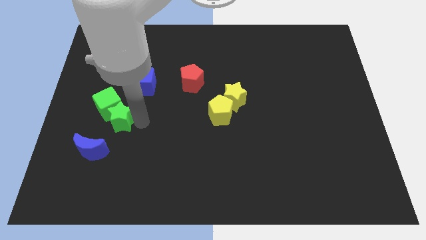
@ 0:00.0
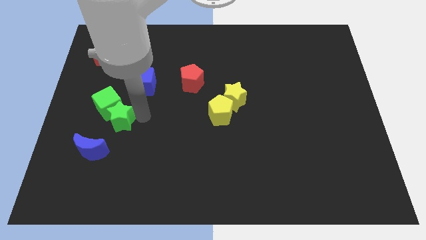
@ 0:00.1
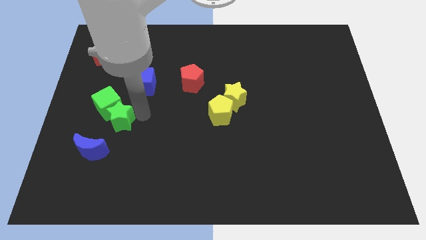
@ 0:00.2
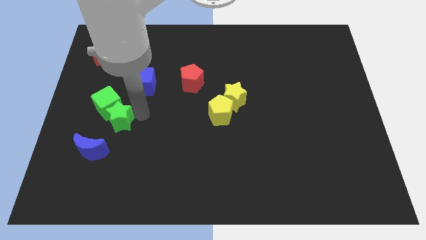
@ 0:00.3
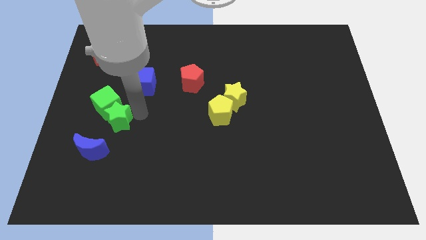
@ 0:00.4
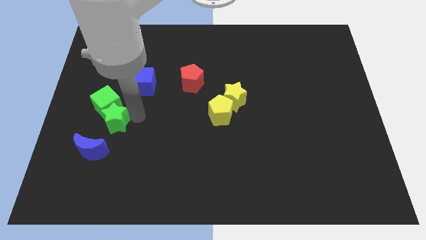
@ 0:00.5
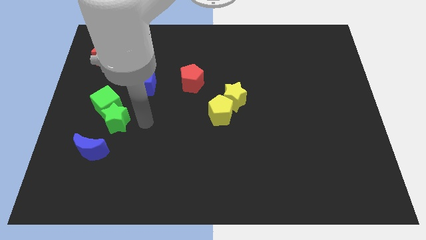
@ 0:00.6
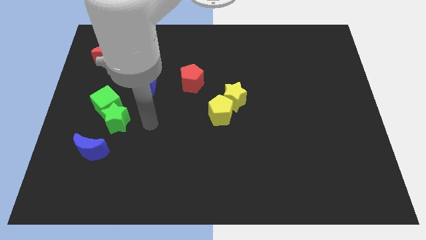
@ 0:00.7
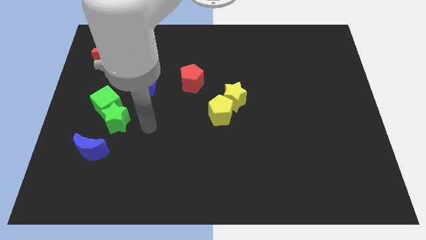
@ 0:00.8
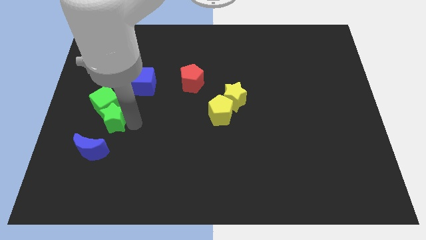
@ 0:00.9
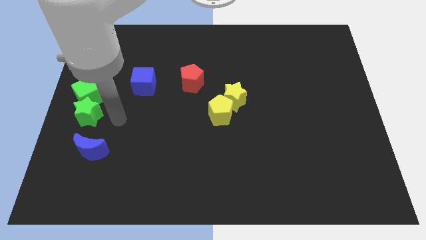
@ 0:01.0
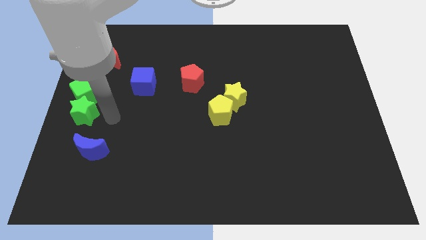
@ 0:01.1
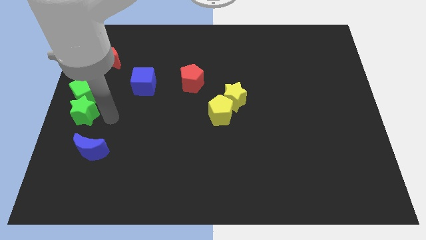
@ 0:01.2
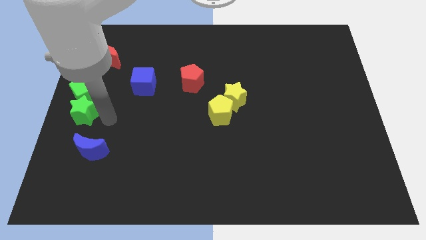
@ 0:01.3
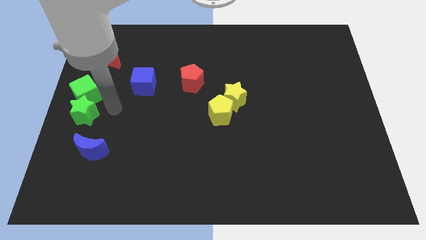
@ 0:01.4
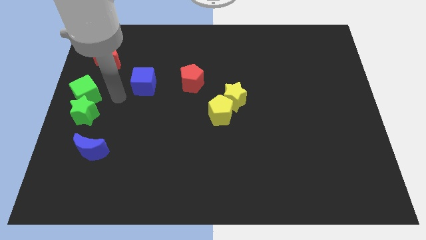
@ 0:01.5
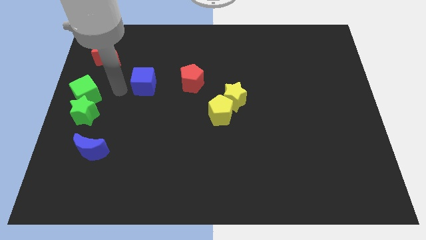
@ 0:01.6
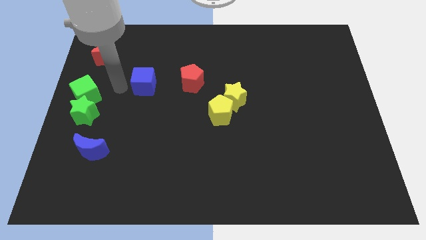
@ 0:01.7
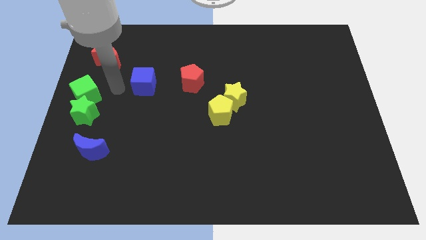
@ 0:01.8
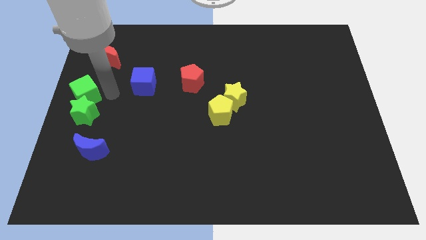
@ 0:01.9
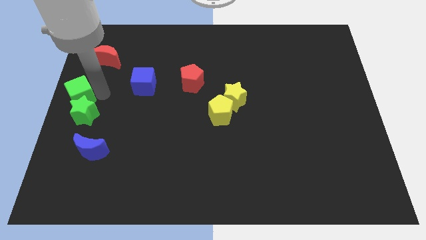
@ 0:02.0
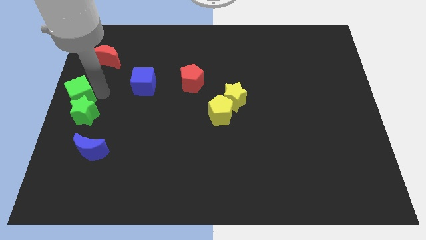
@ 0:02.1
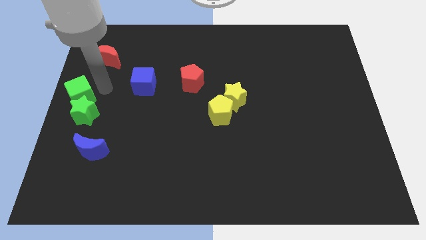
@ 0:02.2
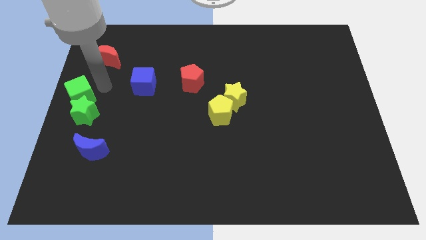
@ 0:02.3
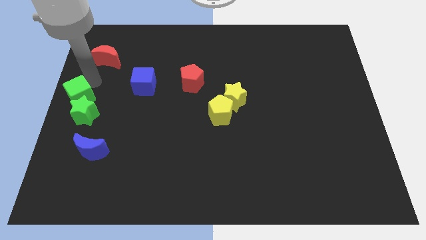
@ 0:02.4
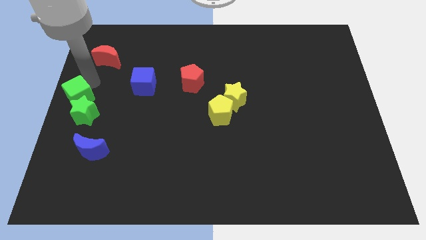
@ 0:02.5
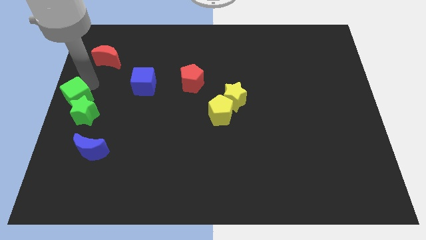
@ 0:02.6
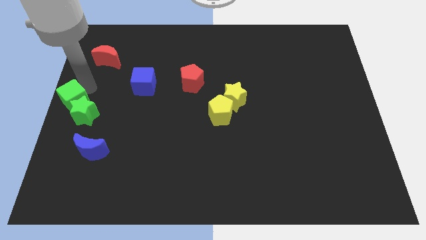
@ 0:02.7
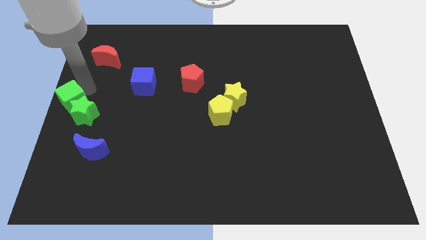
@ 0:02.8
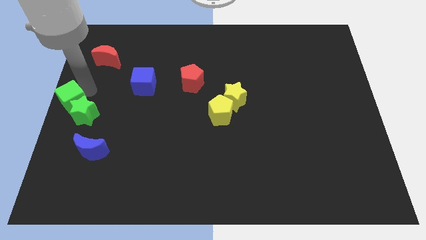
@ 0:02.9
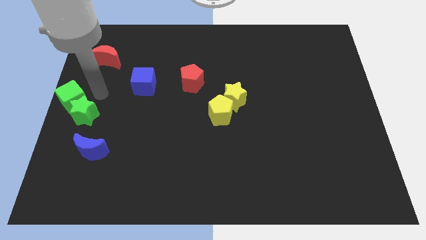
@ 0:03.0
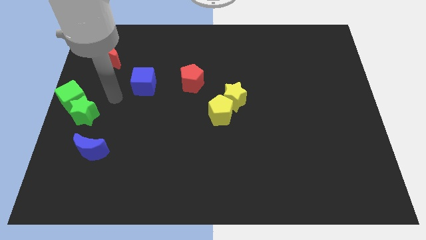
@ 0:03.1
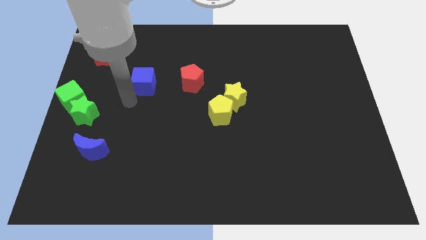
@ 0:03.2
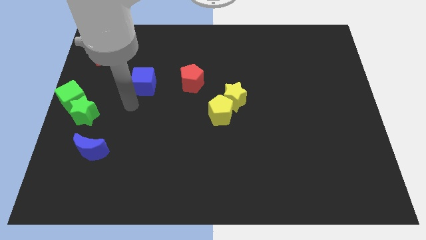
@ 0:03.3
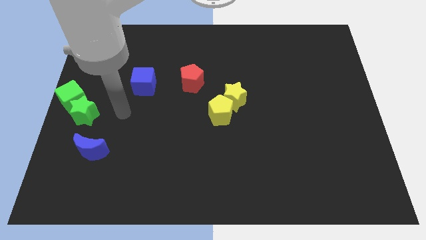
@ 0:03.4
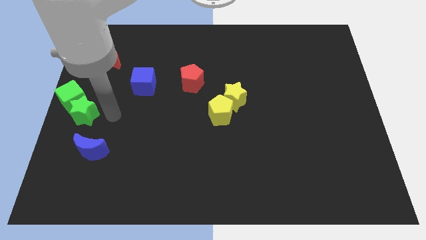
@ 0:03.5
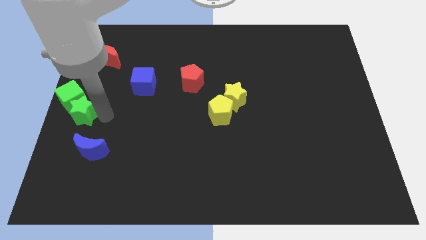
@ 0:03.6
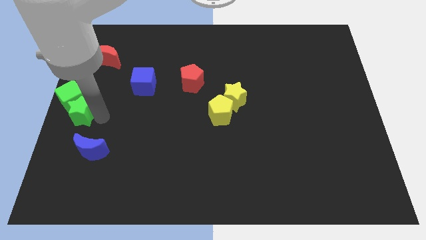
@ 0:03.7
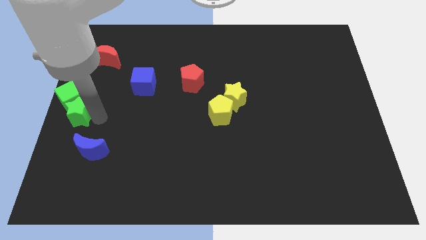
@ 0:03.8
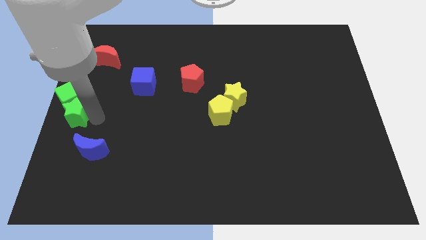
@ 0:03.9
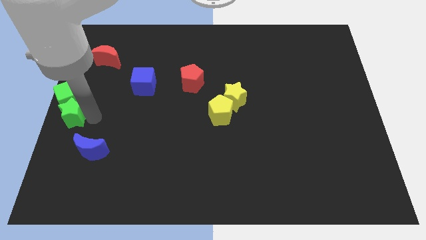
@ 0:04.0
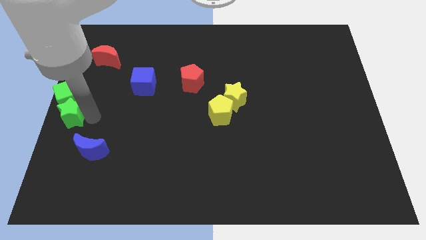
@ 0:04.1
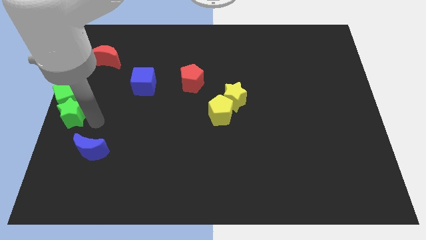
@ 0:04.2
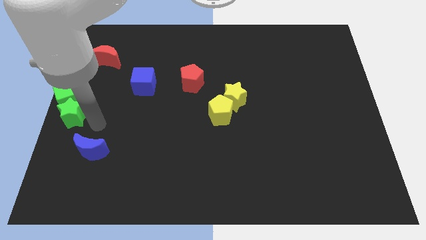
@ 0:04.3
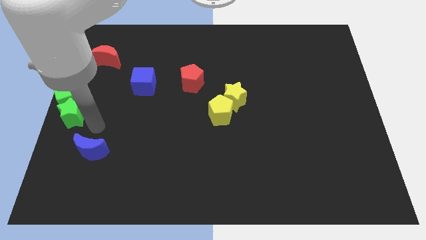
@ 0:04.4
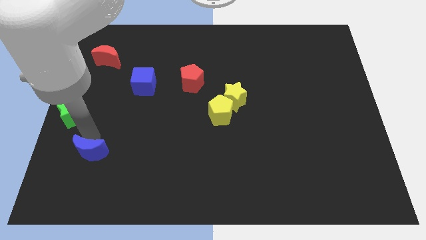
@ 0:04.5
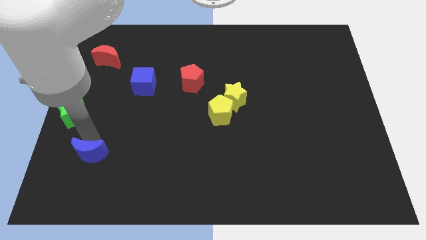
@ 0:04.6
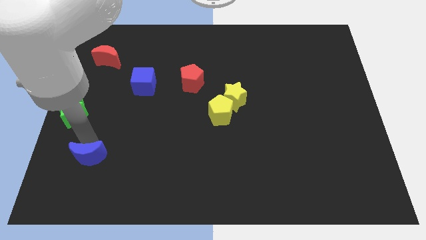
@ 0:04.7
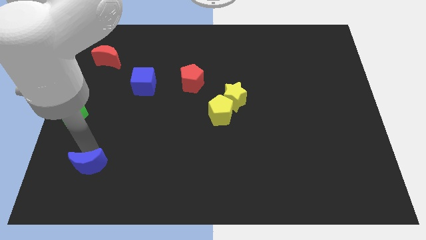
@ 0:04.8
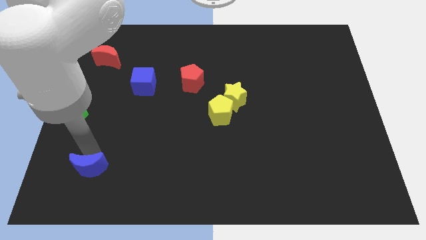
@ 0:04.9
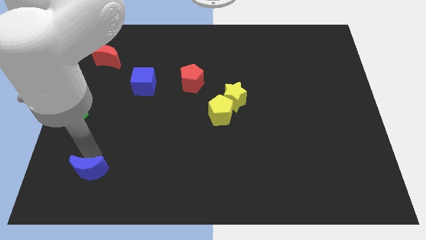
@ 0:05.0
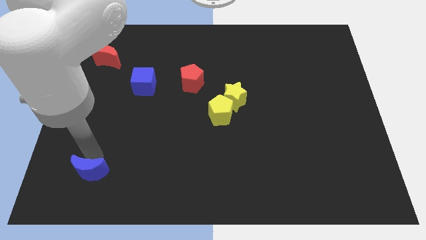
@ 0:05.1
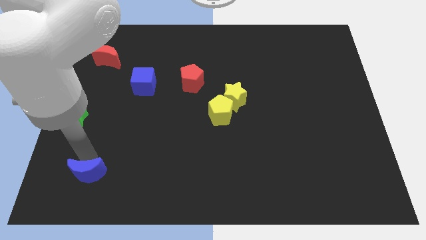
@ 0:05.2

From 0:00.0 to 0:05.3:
move the green cubes to the left center of the board

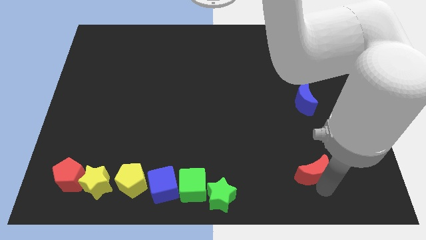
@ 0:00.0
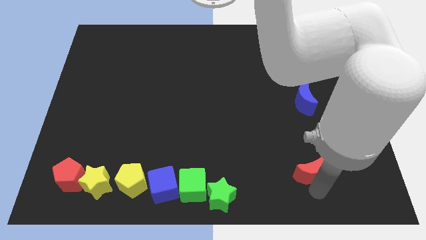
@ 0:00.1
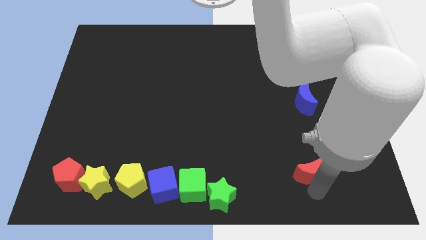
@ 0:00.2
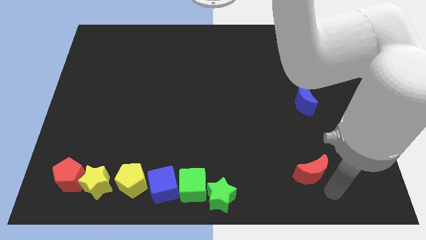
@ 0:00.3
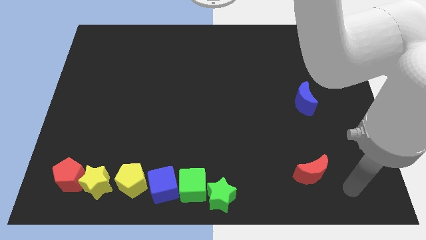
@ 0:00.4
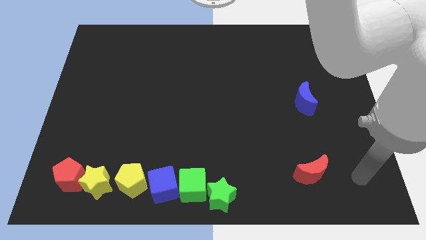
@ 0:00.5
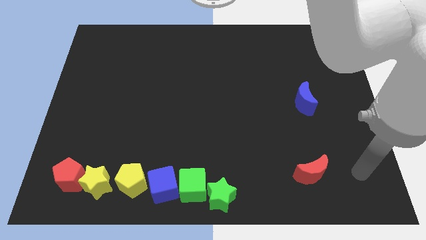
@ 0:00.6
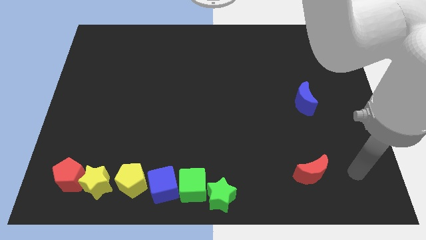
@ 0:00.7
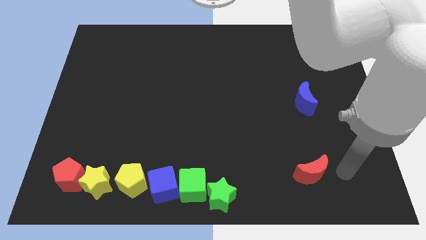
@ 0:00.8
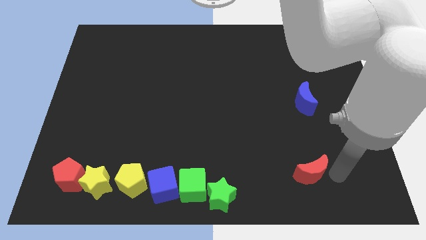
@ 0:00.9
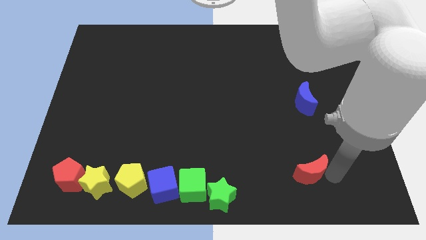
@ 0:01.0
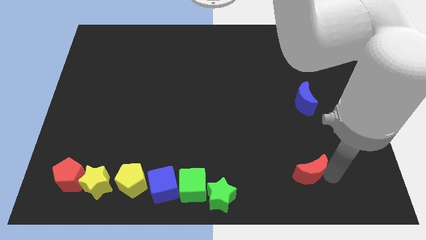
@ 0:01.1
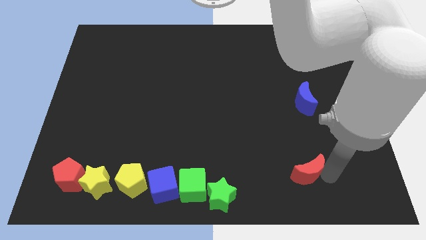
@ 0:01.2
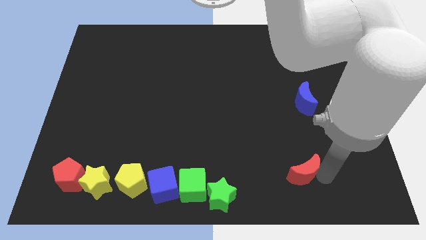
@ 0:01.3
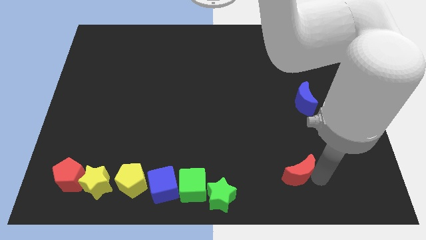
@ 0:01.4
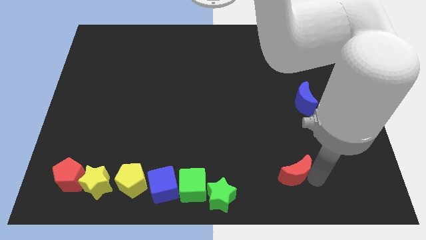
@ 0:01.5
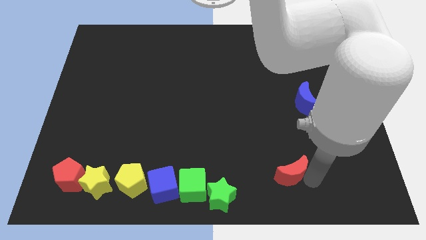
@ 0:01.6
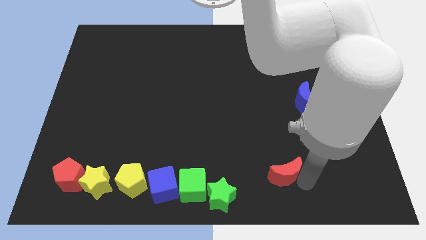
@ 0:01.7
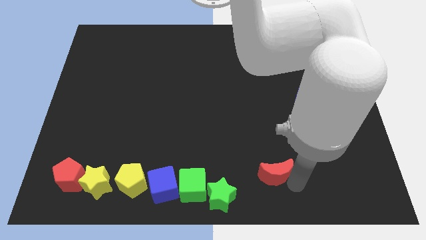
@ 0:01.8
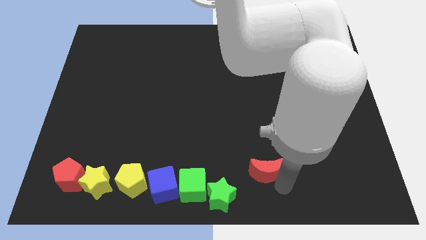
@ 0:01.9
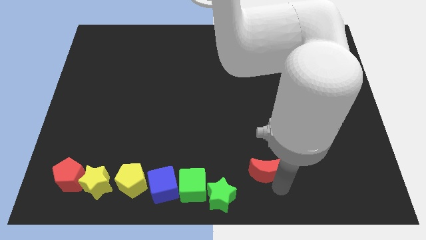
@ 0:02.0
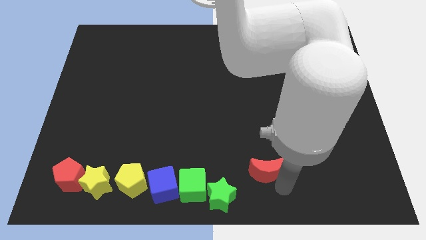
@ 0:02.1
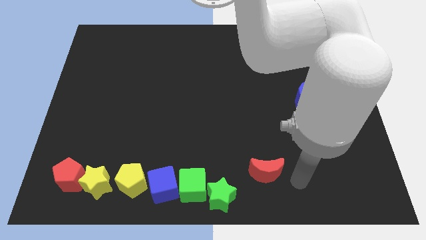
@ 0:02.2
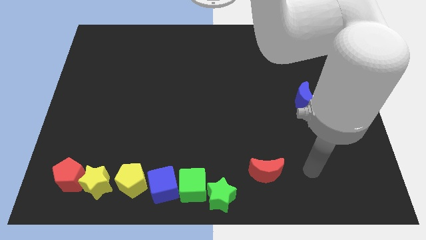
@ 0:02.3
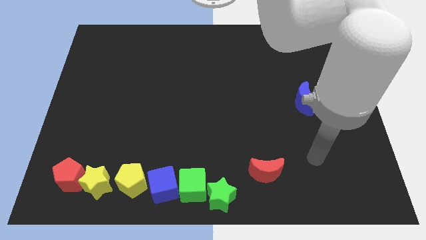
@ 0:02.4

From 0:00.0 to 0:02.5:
push the red crescent diagonal right of green star

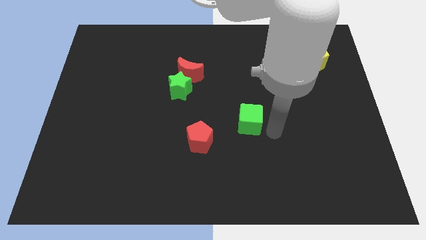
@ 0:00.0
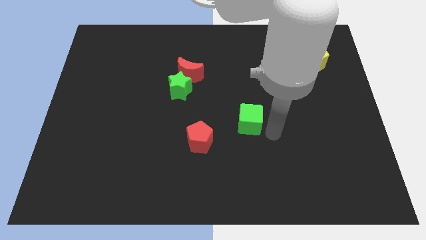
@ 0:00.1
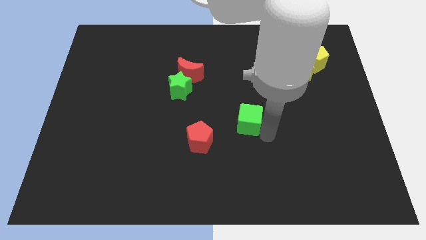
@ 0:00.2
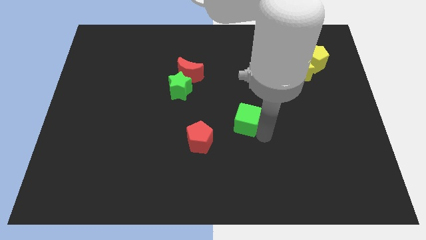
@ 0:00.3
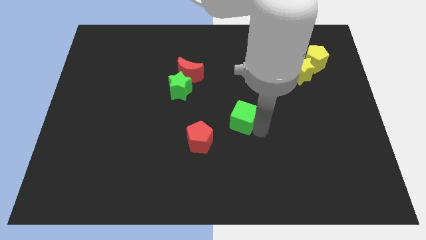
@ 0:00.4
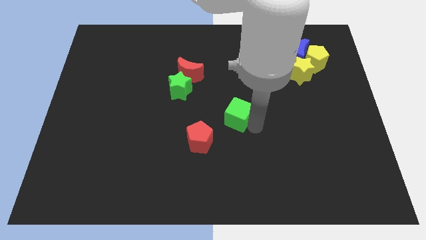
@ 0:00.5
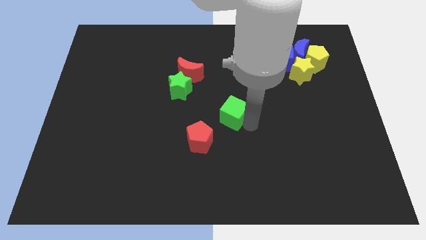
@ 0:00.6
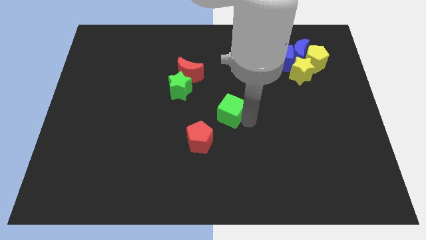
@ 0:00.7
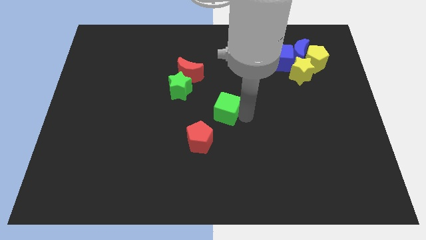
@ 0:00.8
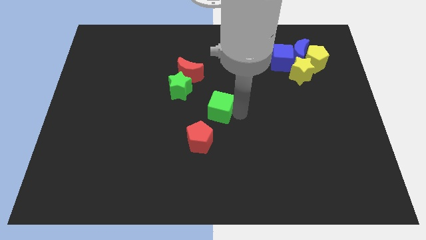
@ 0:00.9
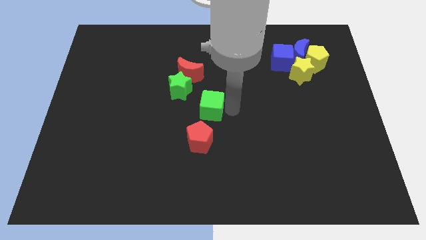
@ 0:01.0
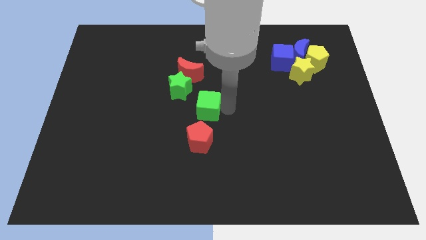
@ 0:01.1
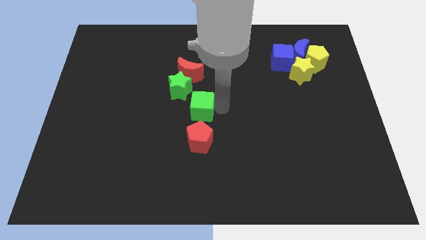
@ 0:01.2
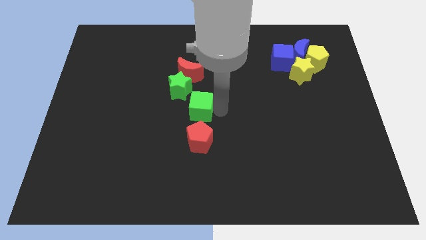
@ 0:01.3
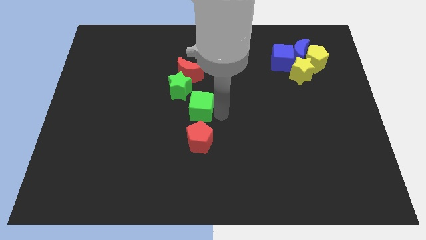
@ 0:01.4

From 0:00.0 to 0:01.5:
push the green cube to the center of the board
